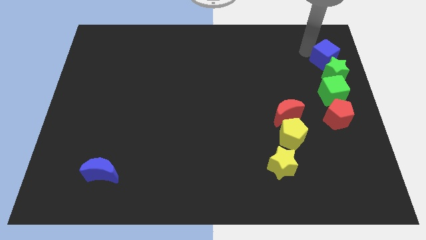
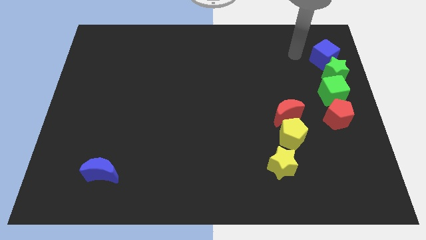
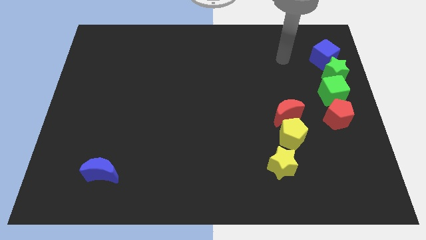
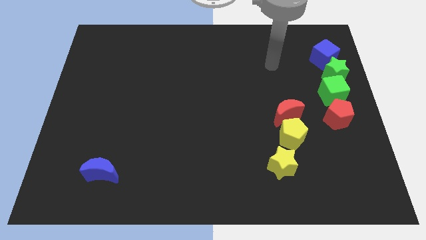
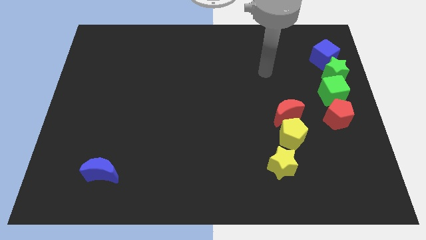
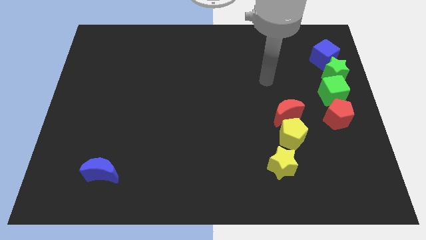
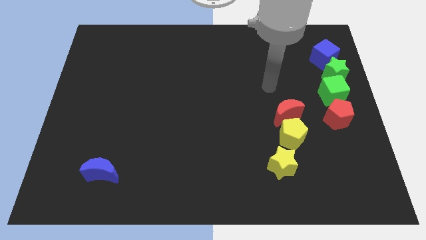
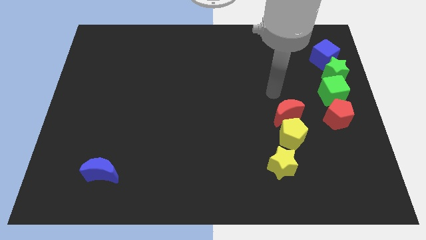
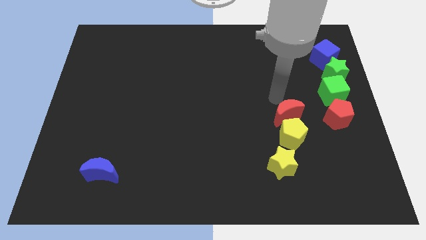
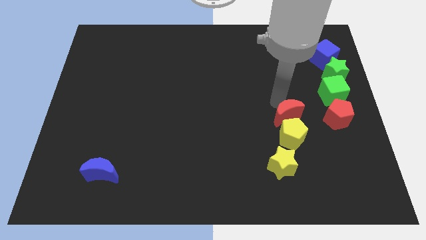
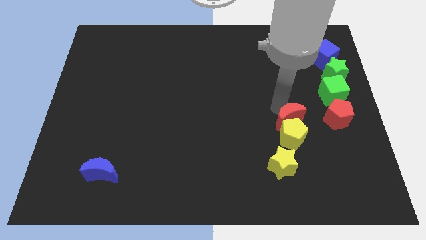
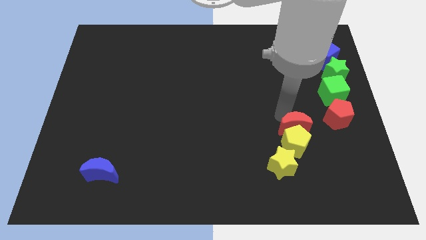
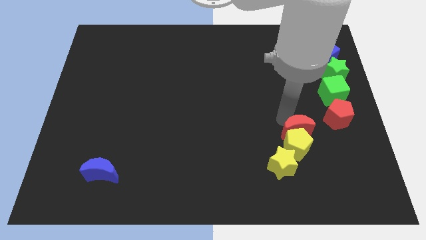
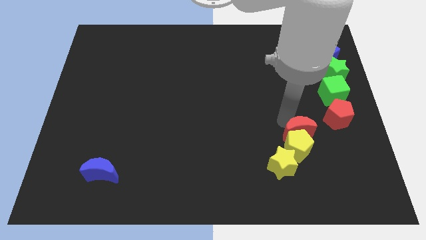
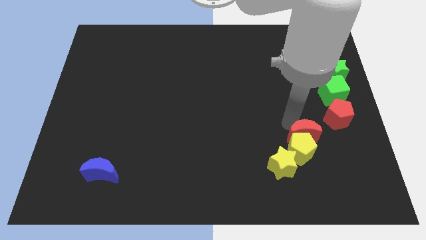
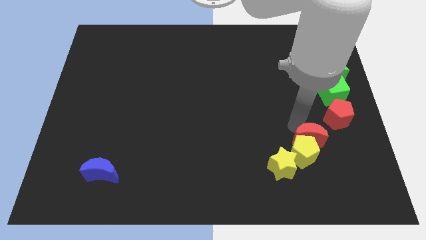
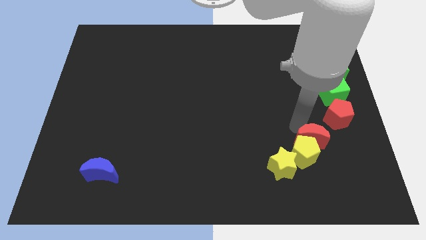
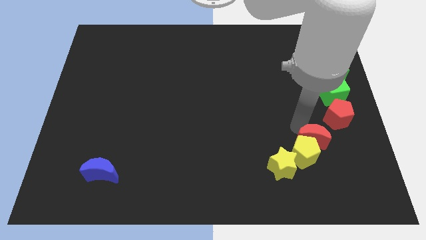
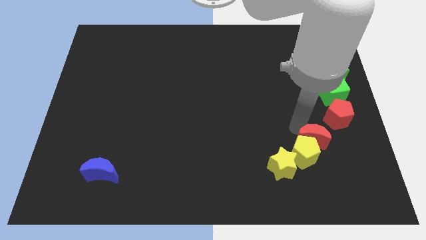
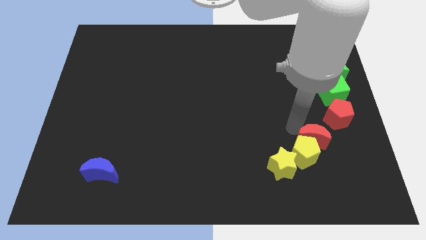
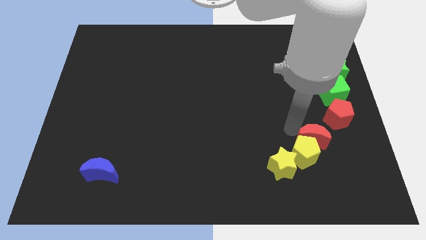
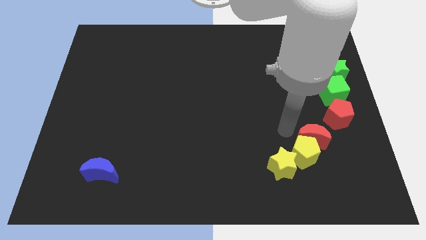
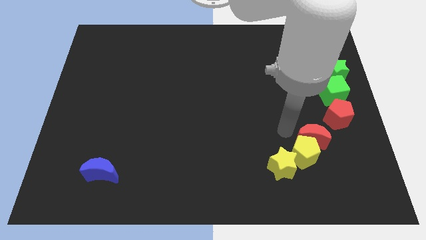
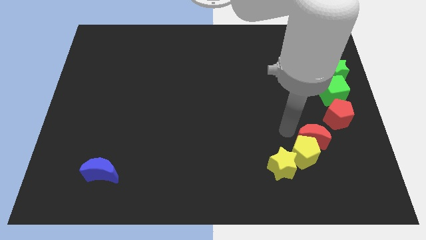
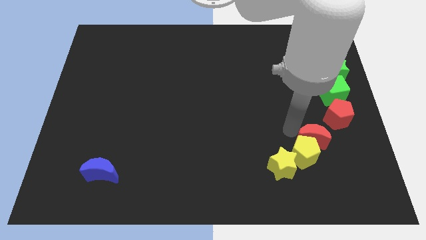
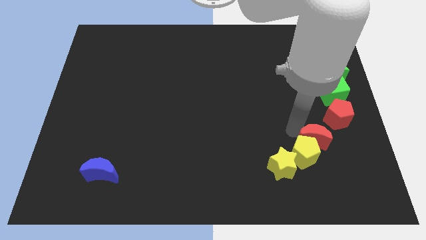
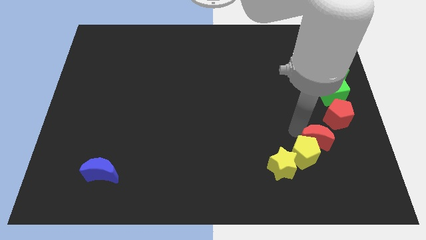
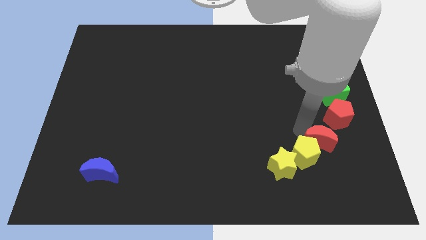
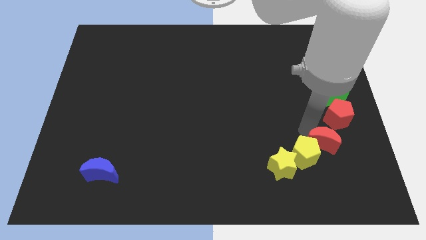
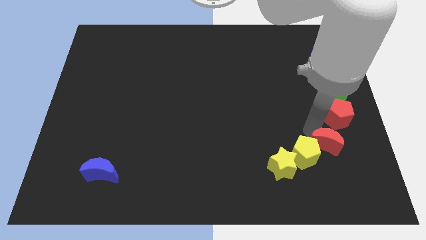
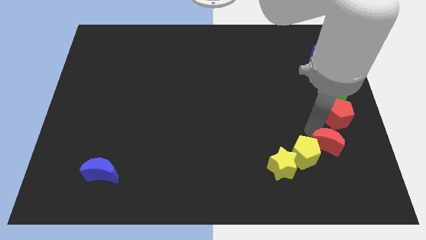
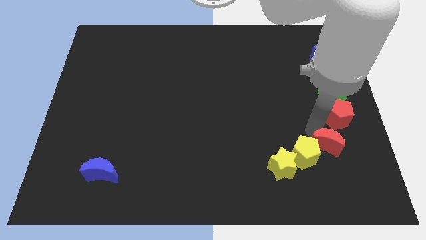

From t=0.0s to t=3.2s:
slide the red crescent into the yellow pentagon

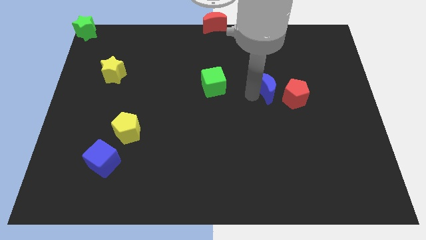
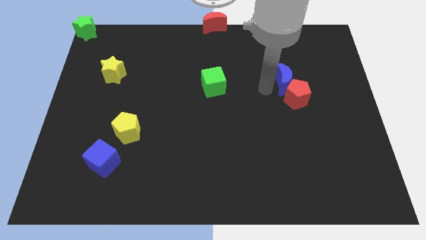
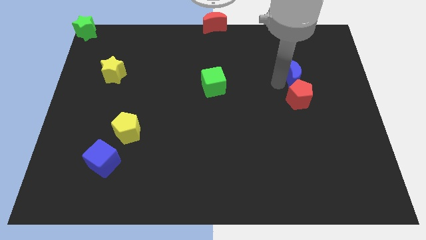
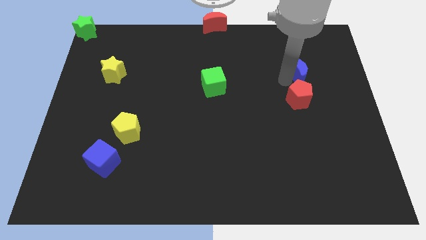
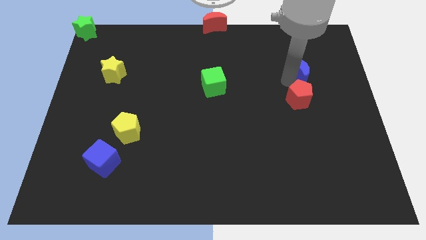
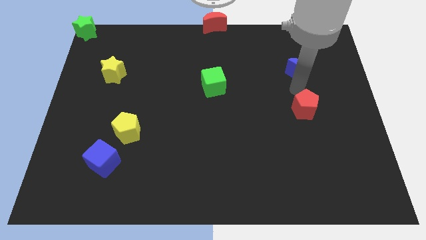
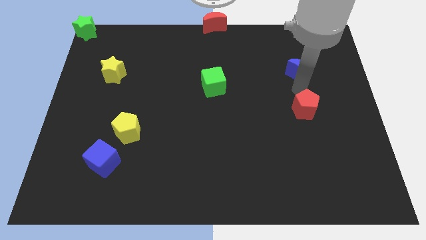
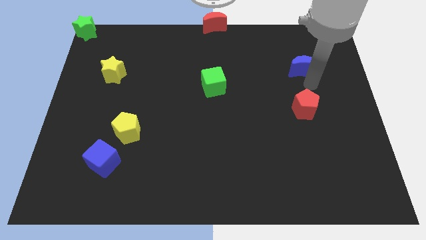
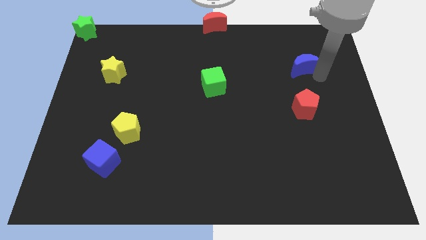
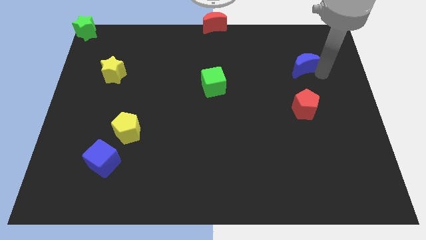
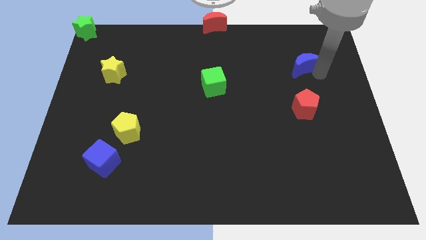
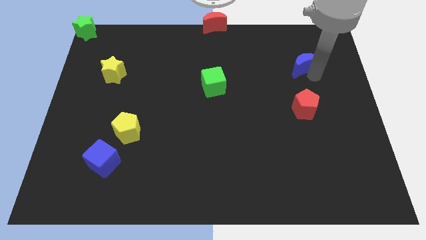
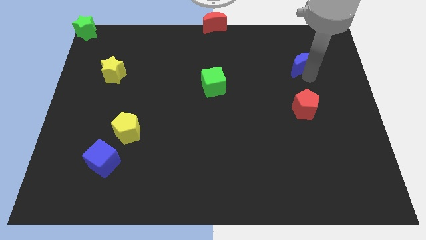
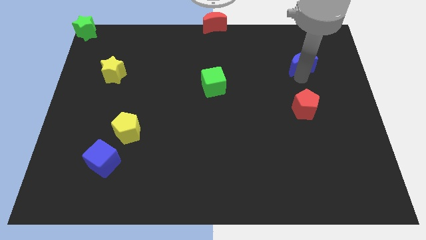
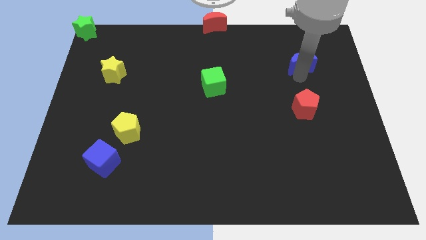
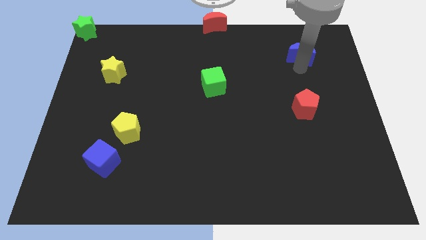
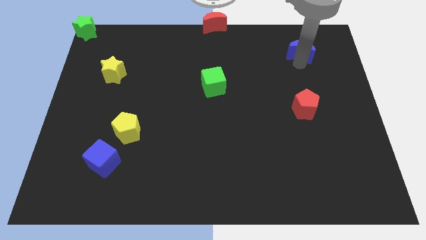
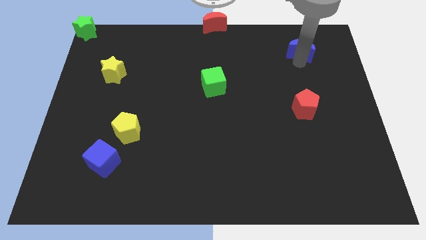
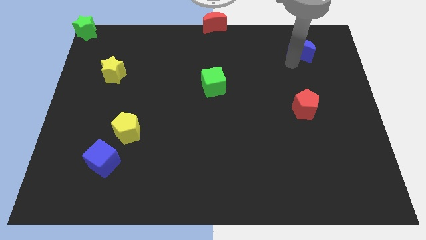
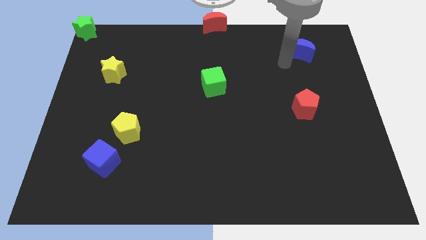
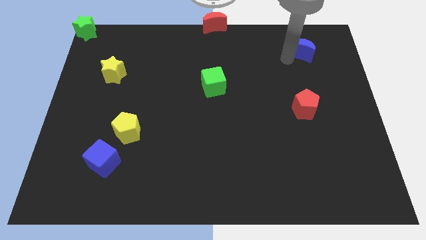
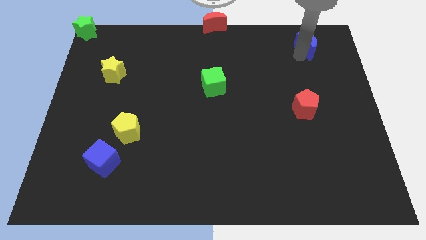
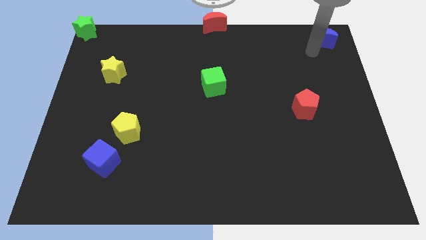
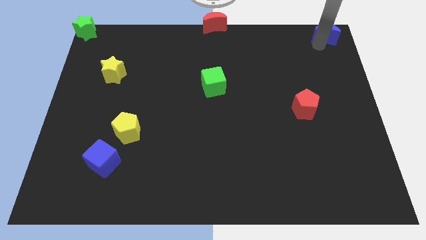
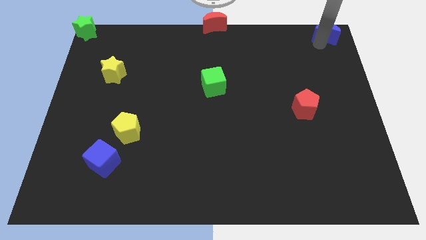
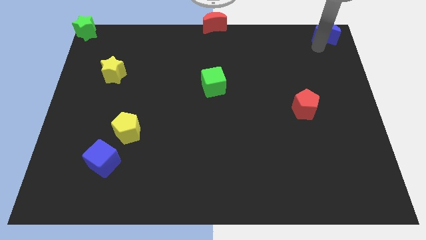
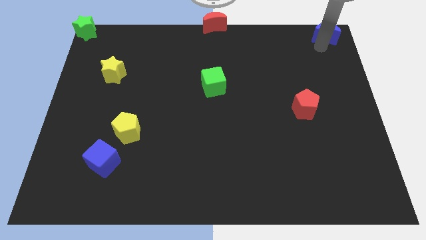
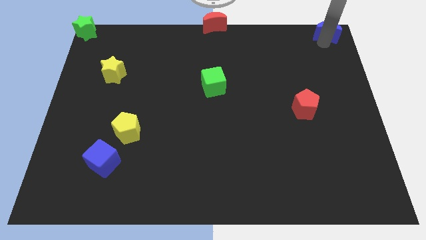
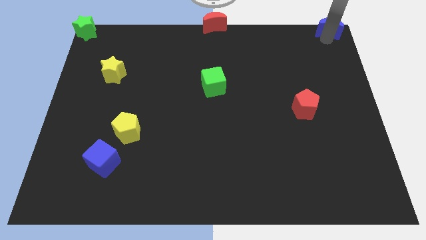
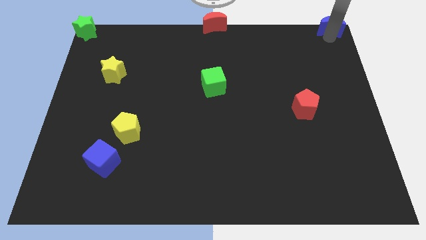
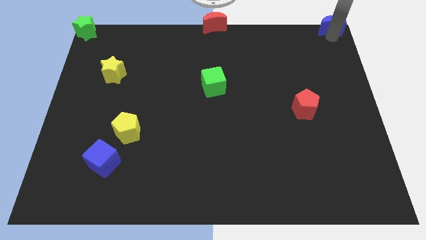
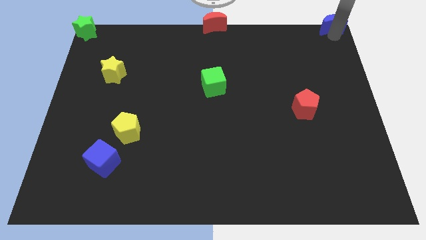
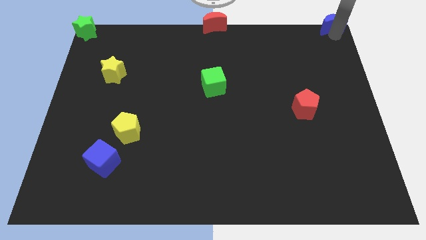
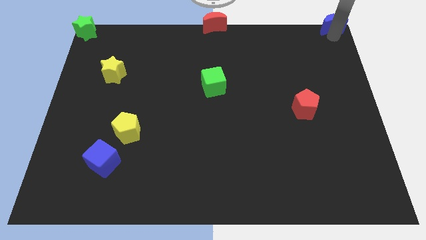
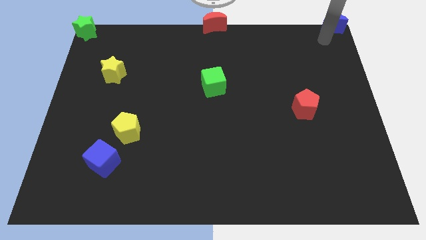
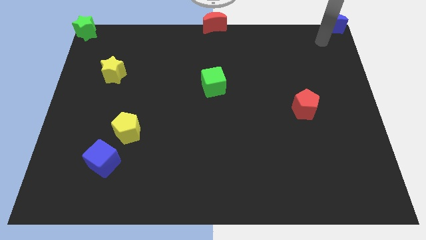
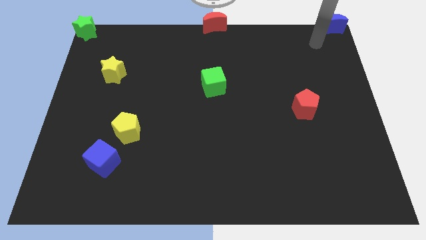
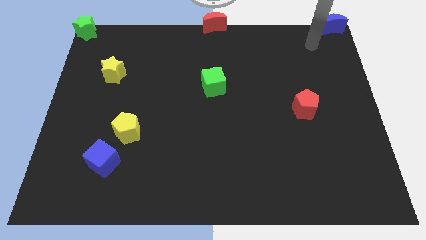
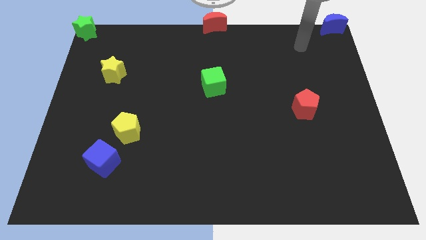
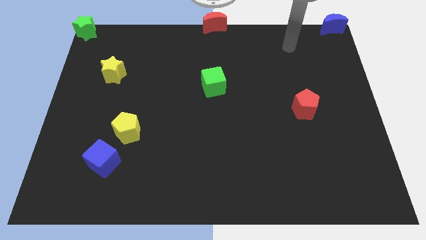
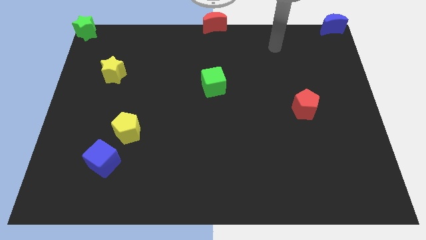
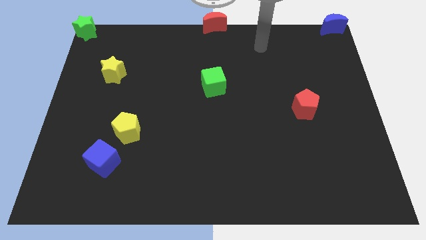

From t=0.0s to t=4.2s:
place blue crescent on the top right corner of the board

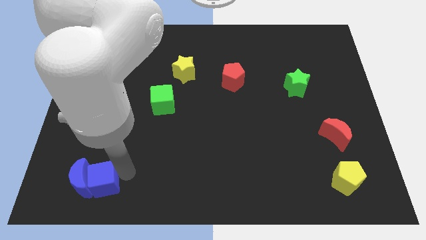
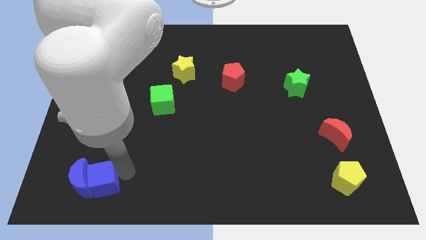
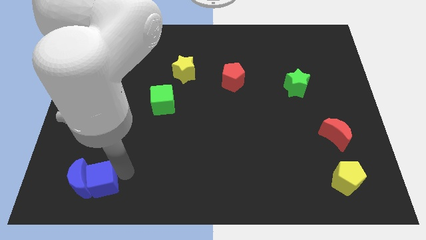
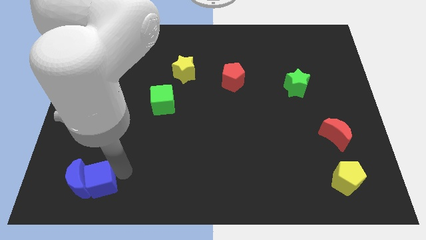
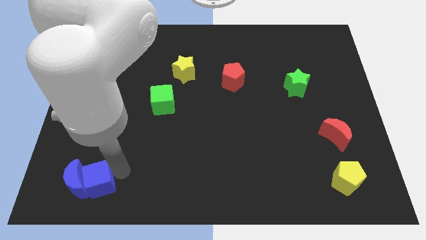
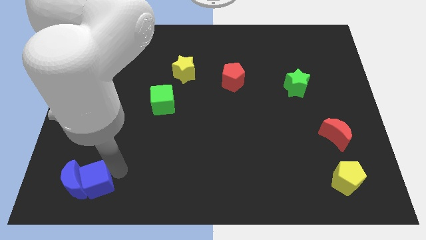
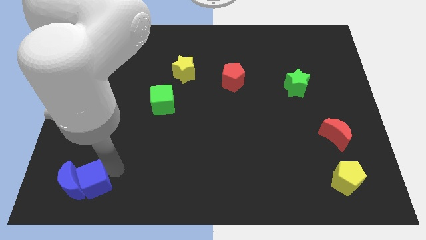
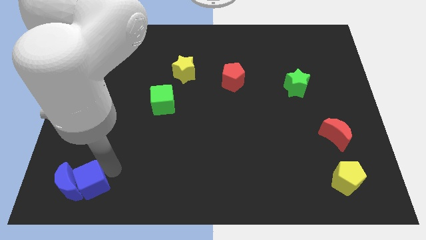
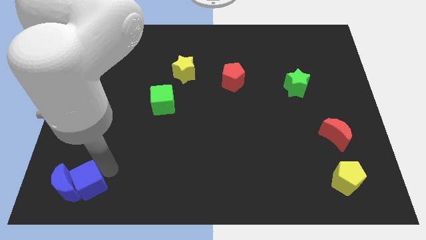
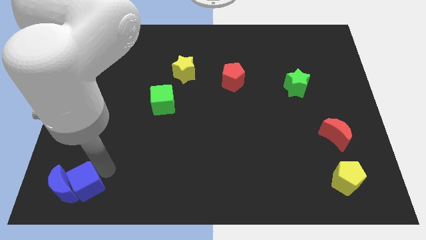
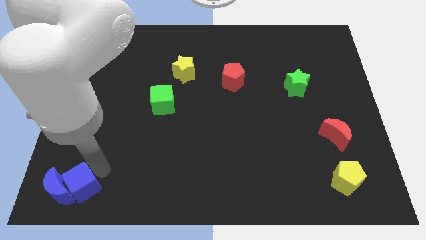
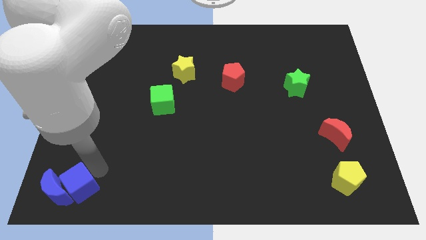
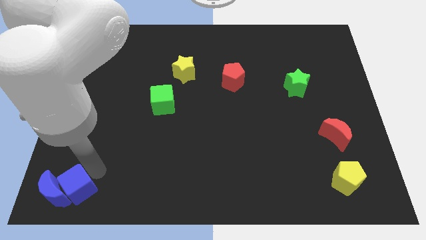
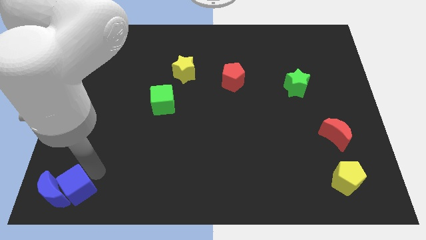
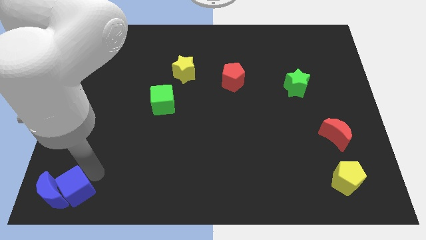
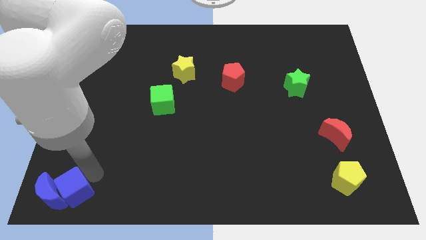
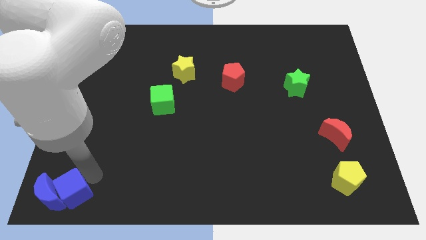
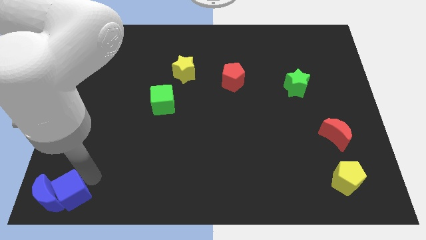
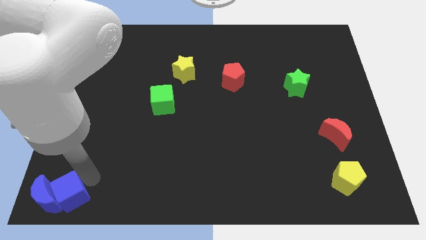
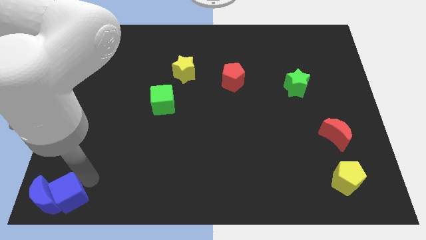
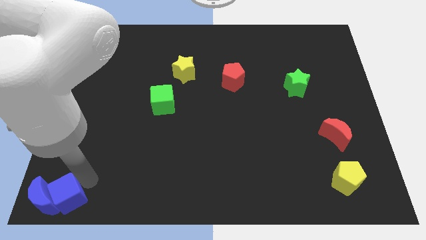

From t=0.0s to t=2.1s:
push the blue cube towards the blue crescent
